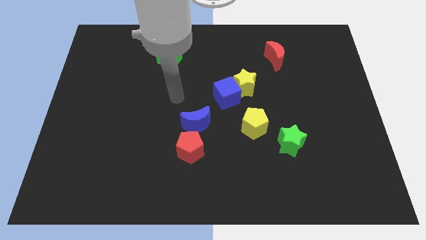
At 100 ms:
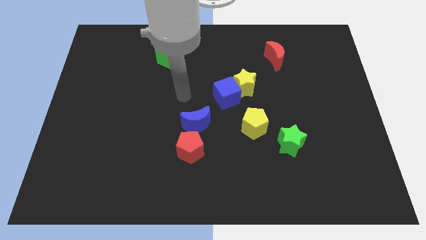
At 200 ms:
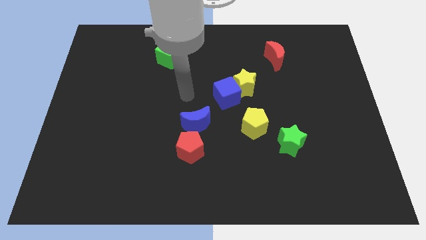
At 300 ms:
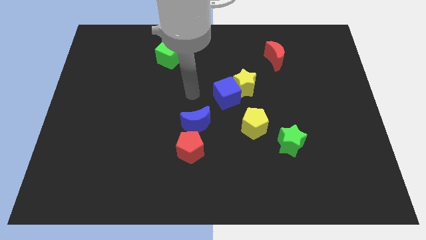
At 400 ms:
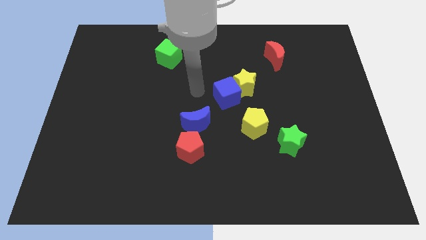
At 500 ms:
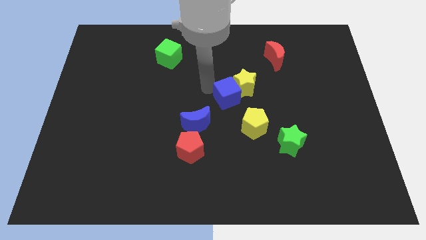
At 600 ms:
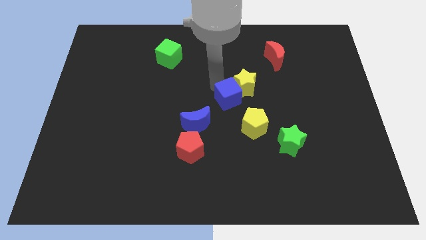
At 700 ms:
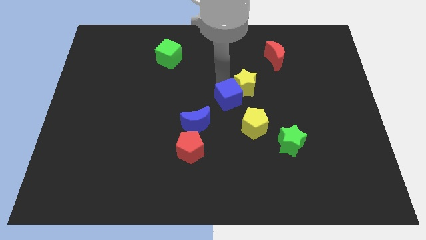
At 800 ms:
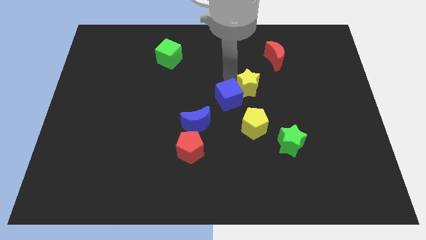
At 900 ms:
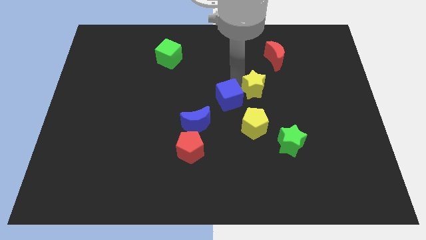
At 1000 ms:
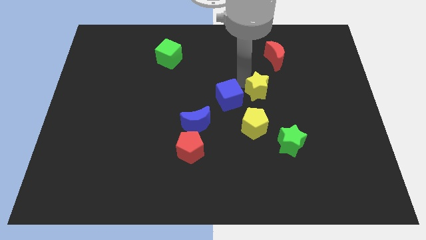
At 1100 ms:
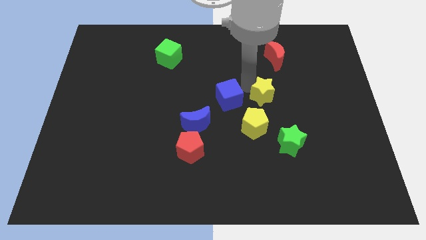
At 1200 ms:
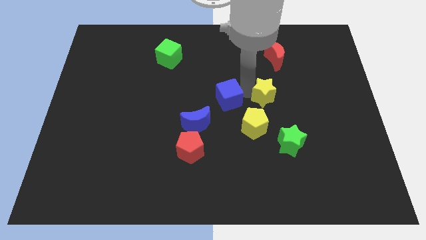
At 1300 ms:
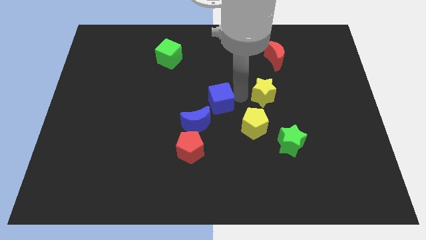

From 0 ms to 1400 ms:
move the yellow star right to the blue cube

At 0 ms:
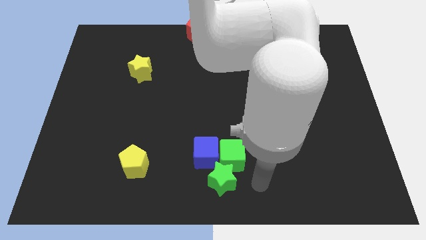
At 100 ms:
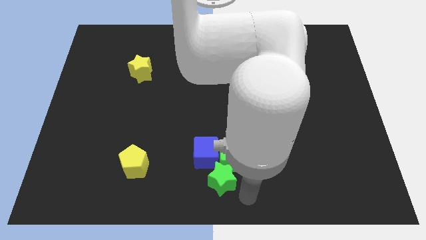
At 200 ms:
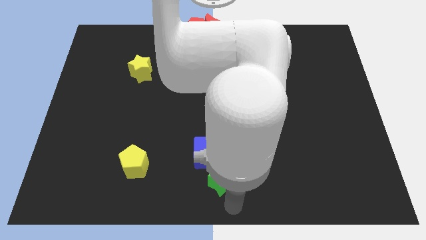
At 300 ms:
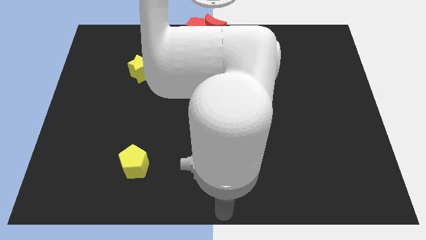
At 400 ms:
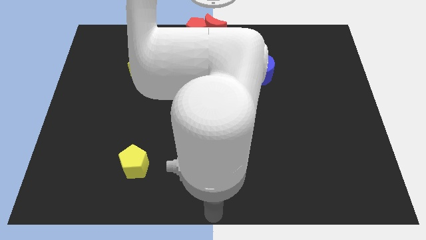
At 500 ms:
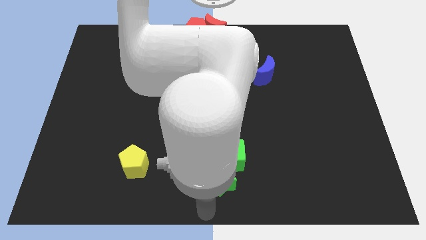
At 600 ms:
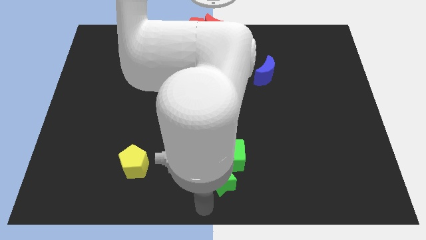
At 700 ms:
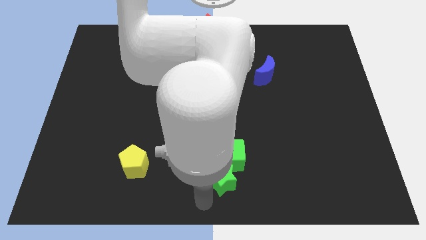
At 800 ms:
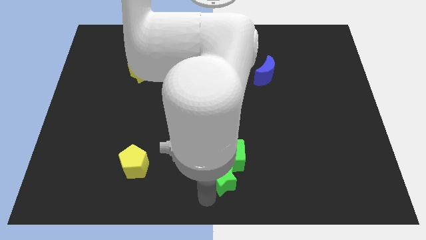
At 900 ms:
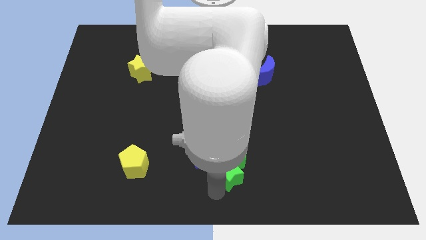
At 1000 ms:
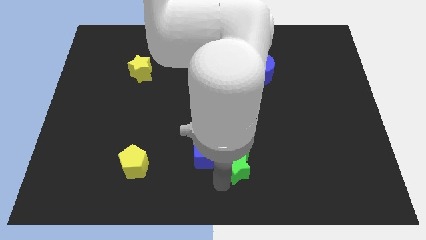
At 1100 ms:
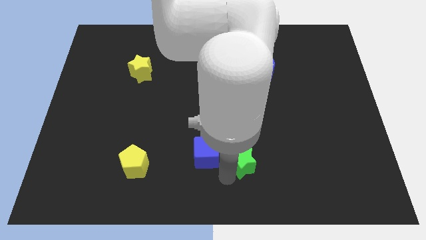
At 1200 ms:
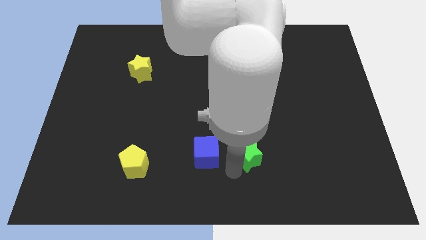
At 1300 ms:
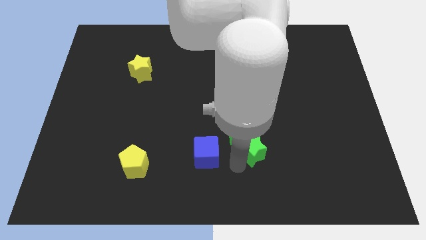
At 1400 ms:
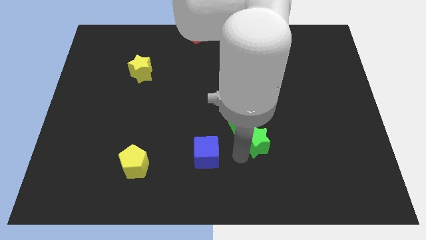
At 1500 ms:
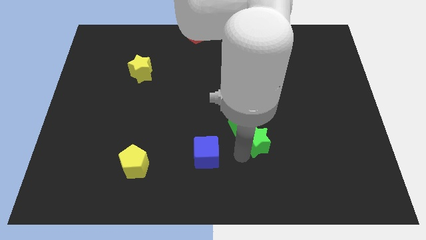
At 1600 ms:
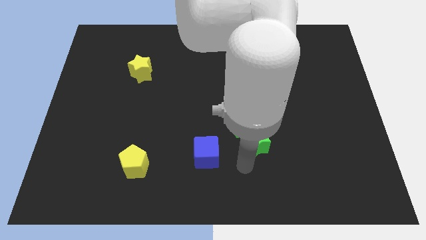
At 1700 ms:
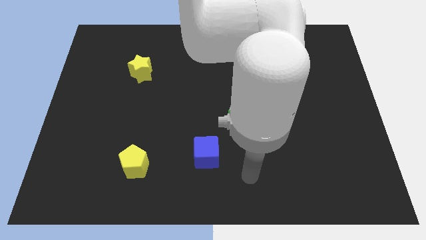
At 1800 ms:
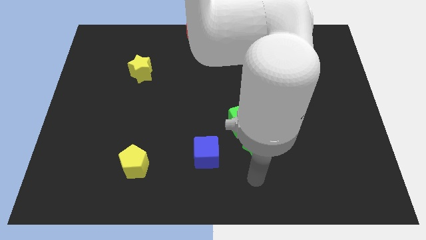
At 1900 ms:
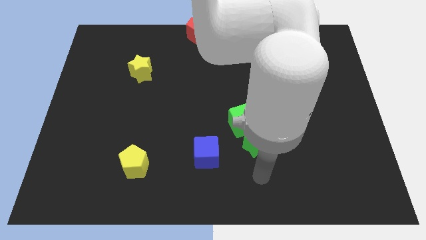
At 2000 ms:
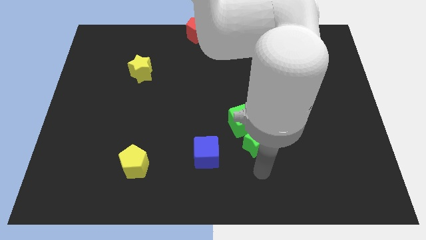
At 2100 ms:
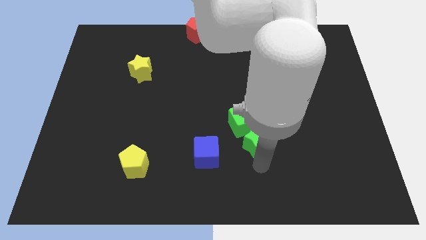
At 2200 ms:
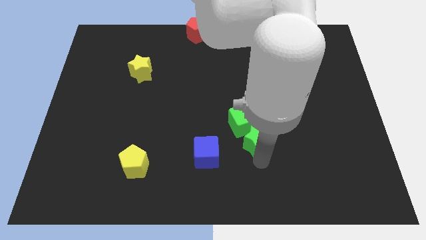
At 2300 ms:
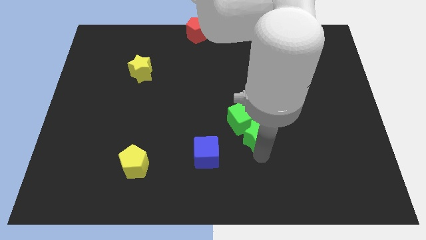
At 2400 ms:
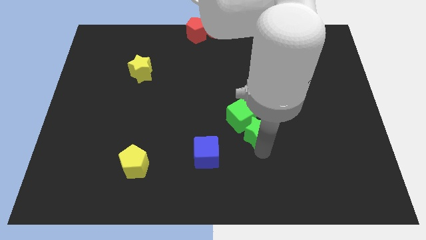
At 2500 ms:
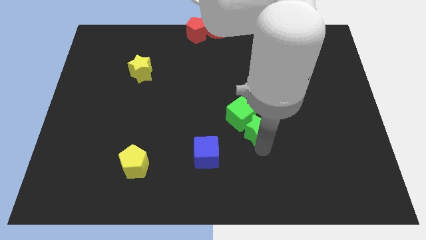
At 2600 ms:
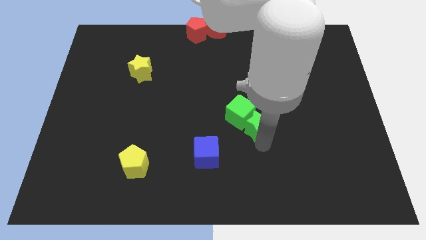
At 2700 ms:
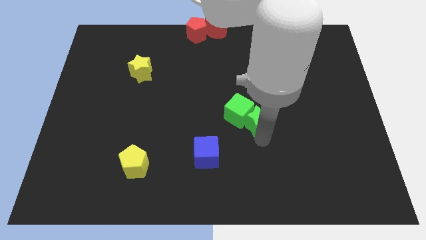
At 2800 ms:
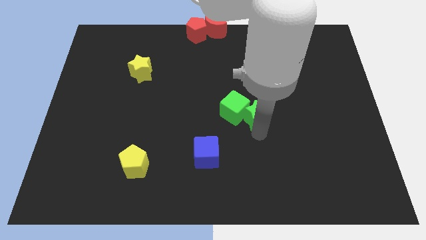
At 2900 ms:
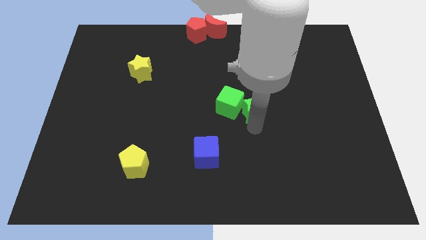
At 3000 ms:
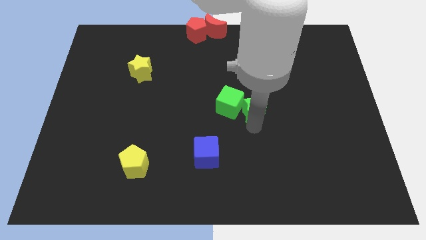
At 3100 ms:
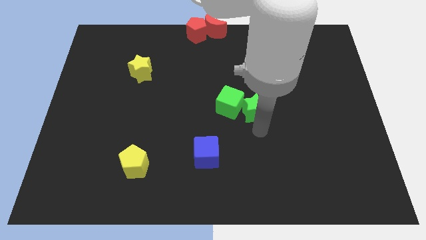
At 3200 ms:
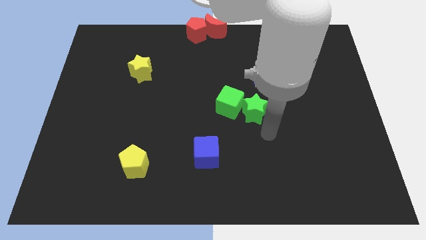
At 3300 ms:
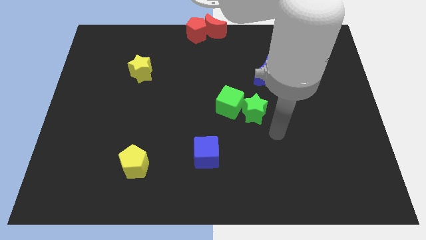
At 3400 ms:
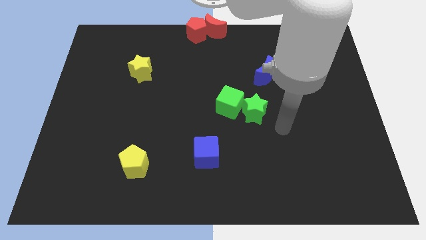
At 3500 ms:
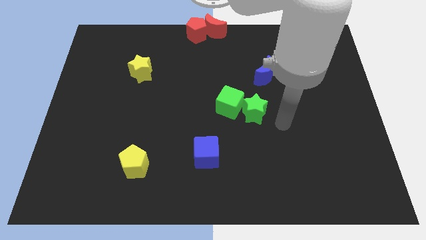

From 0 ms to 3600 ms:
move green blocks diagonally between the two blue blocks

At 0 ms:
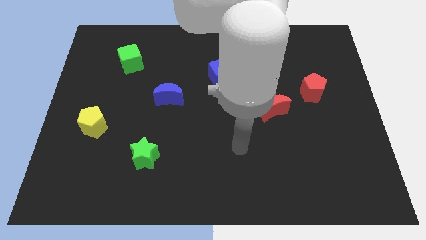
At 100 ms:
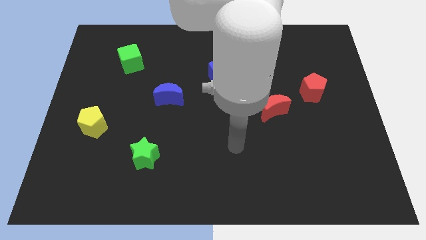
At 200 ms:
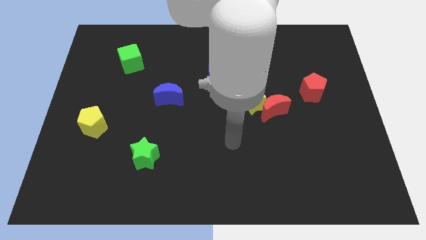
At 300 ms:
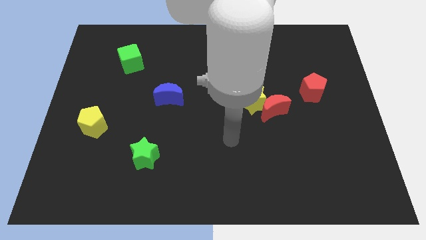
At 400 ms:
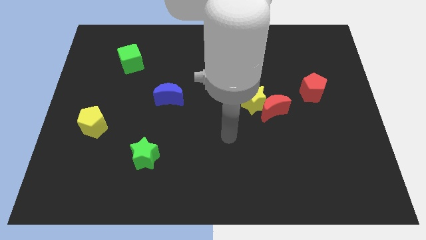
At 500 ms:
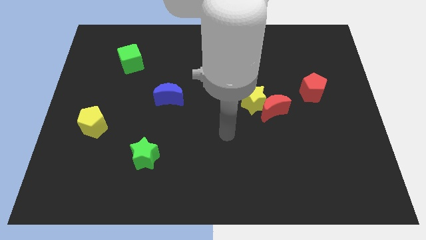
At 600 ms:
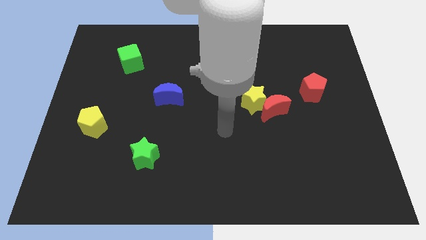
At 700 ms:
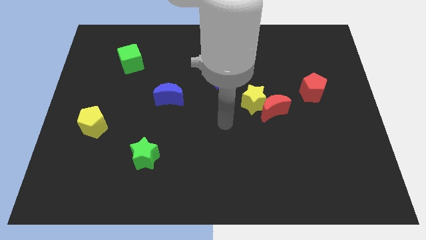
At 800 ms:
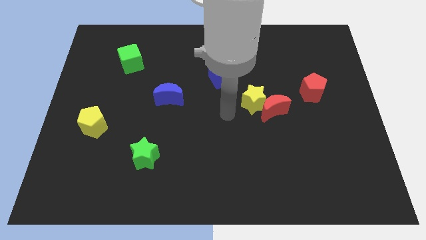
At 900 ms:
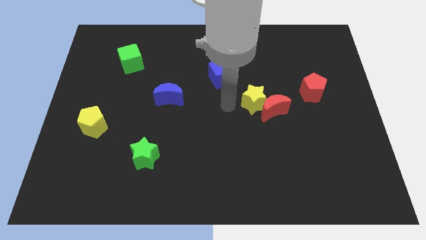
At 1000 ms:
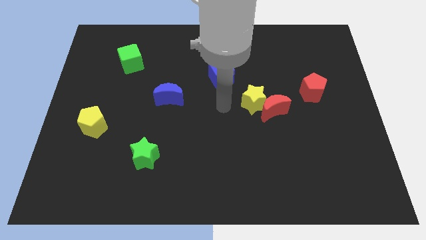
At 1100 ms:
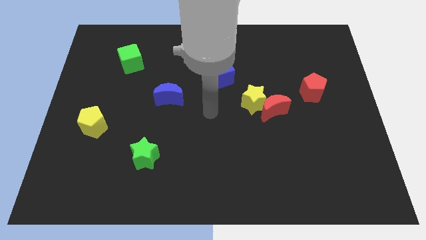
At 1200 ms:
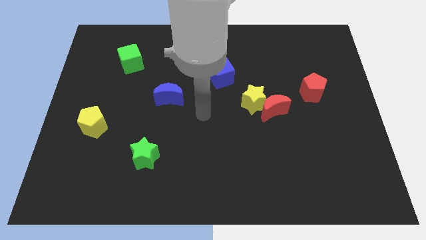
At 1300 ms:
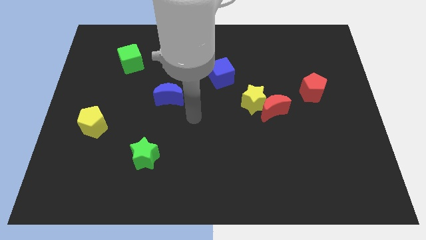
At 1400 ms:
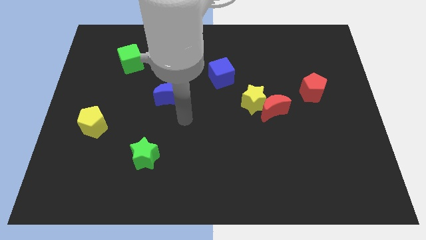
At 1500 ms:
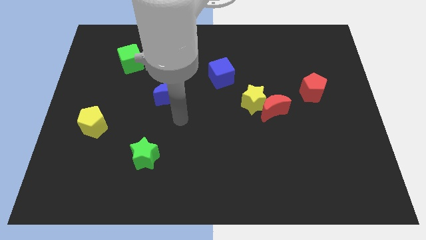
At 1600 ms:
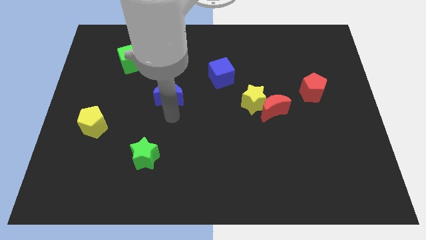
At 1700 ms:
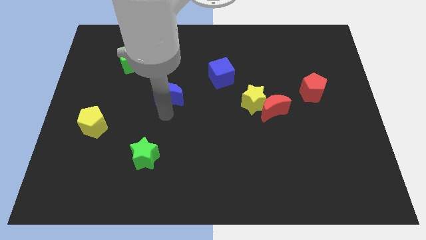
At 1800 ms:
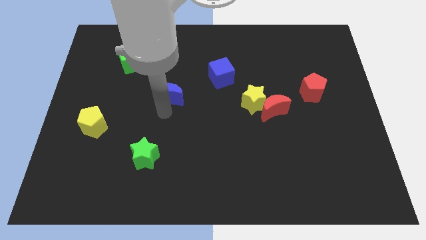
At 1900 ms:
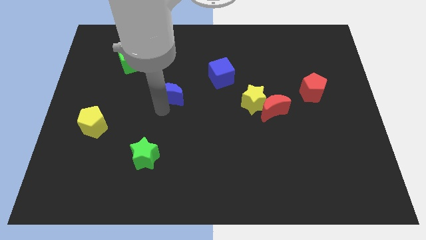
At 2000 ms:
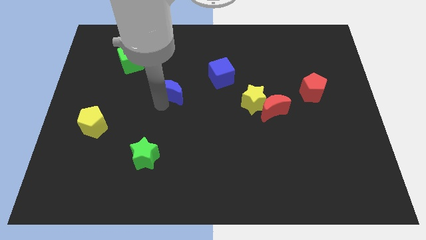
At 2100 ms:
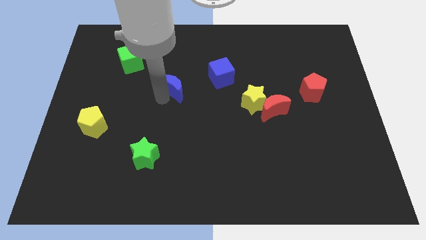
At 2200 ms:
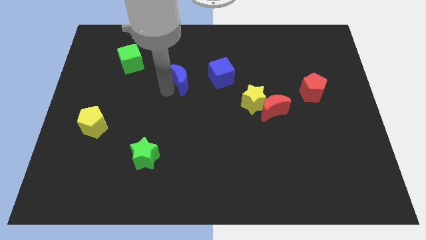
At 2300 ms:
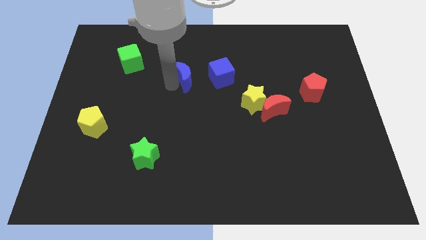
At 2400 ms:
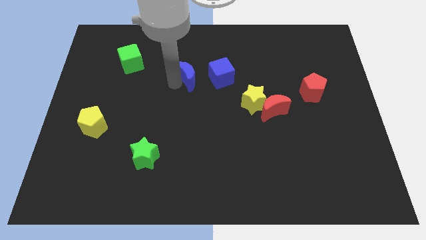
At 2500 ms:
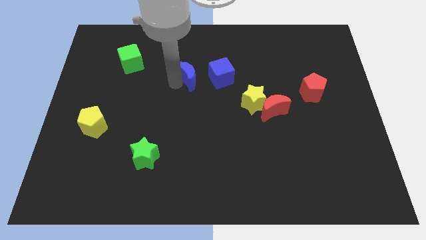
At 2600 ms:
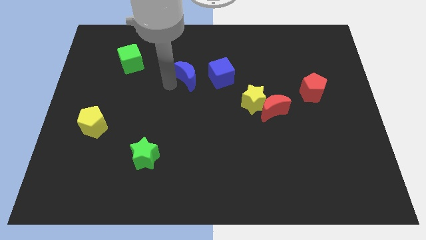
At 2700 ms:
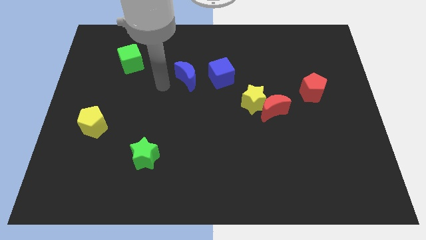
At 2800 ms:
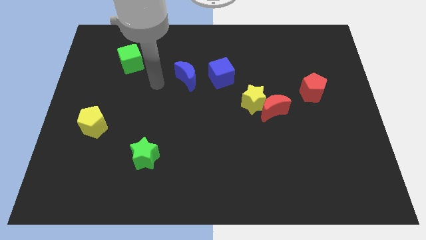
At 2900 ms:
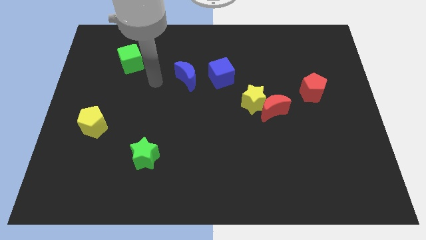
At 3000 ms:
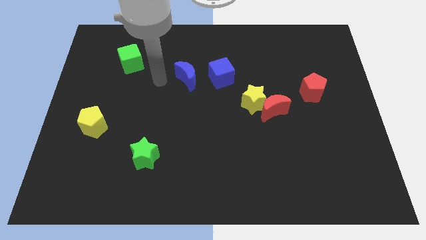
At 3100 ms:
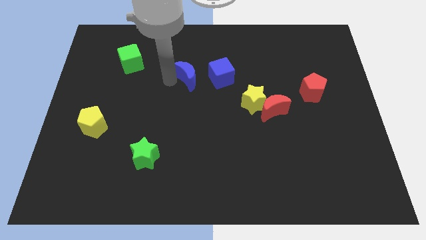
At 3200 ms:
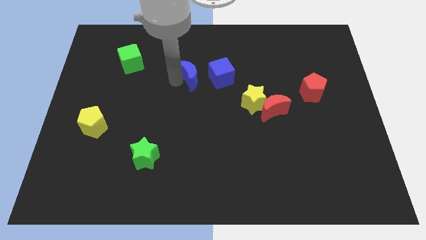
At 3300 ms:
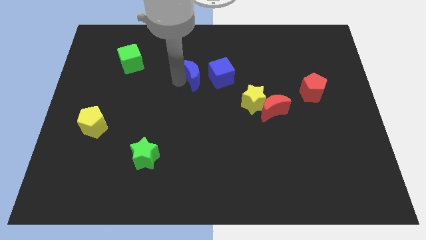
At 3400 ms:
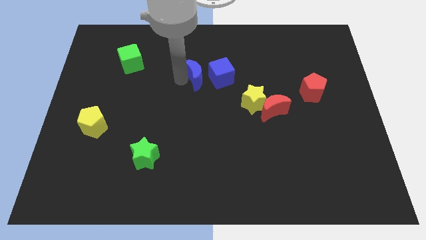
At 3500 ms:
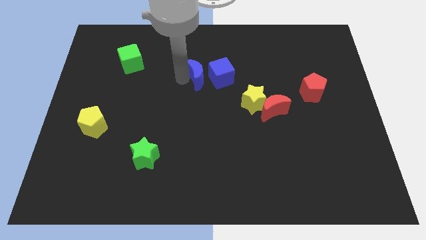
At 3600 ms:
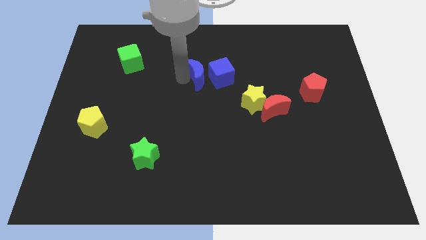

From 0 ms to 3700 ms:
push the blue crescent towards the blue cube

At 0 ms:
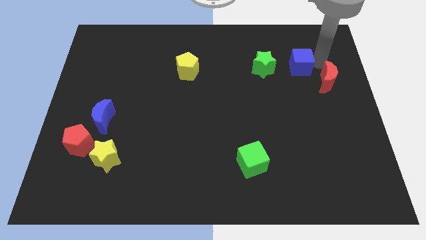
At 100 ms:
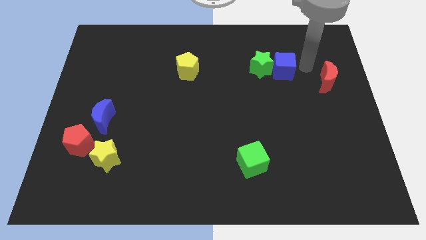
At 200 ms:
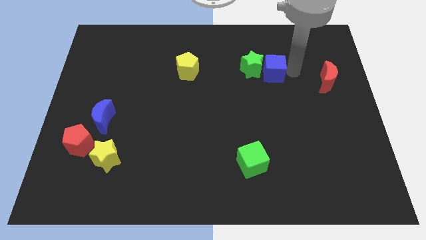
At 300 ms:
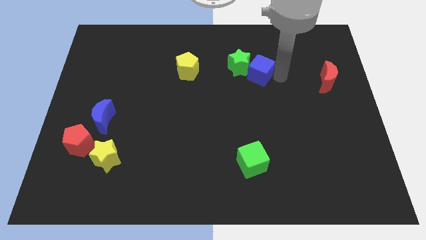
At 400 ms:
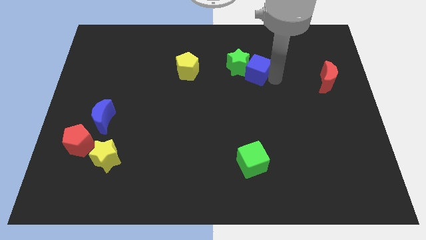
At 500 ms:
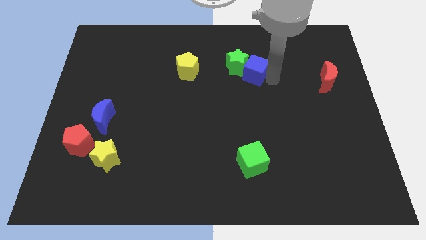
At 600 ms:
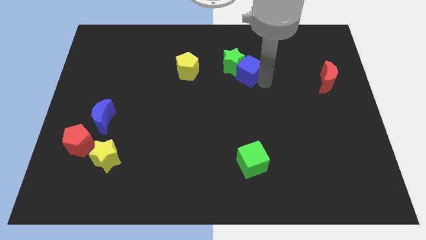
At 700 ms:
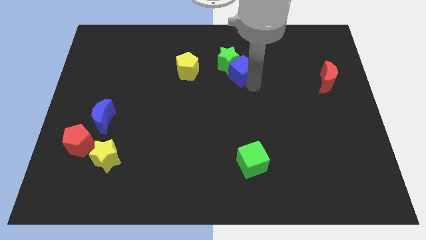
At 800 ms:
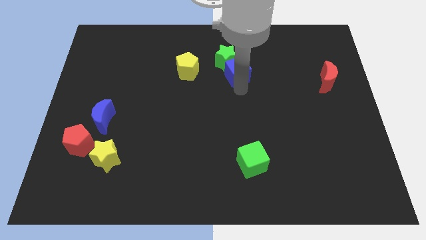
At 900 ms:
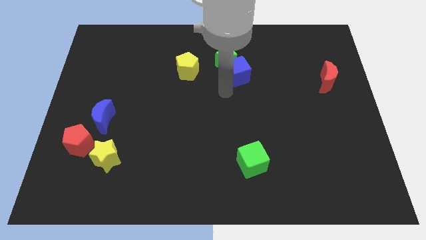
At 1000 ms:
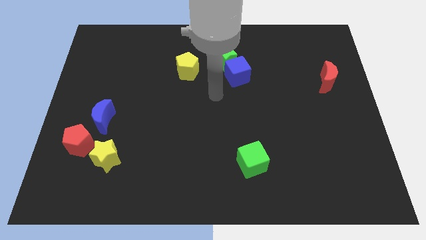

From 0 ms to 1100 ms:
push the blue cube into the green star
